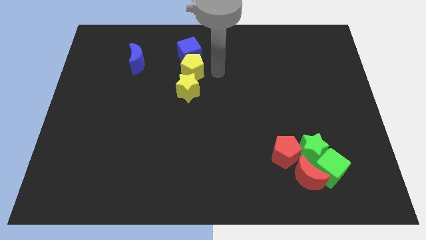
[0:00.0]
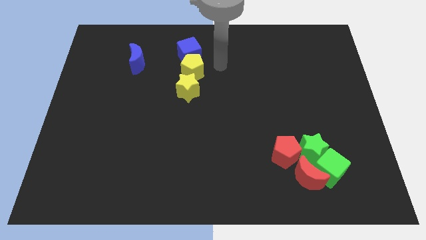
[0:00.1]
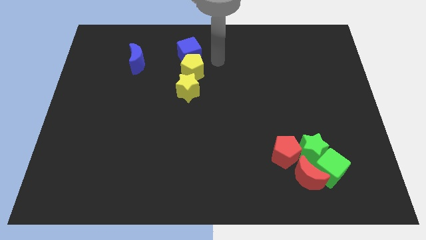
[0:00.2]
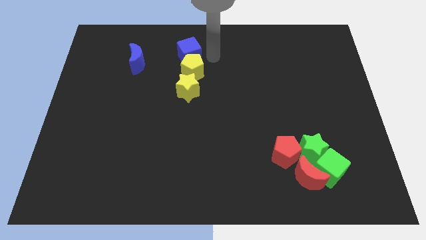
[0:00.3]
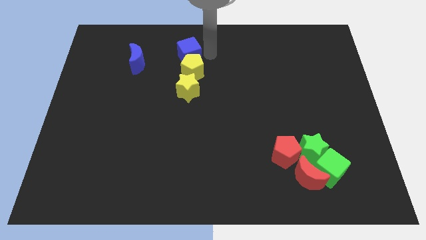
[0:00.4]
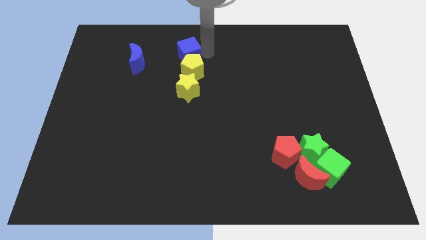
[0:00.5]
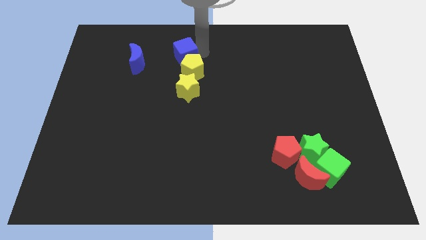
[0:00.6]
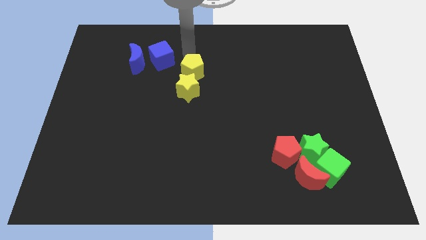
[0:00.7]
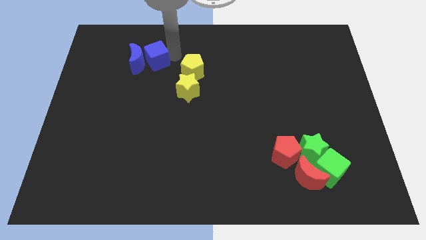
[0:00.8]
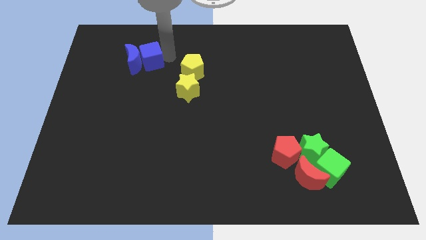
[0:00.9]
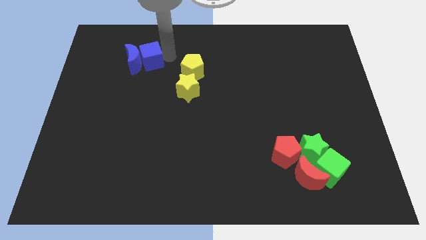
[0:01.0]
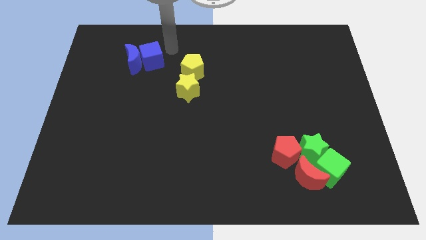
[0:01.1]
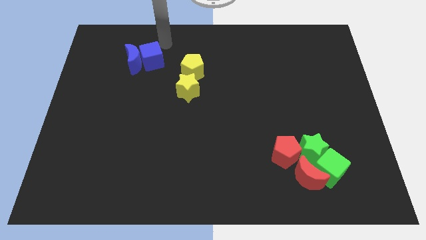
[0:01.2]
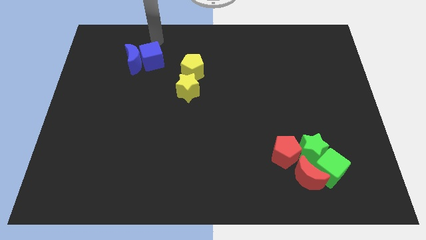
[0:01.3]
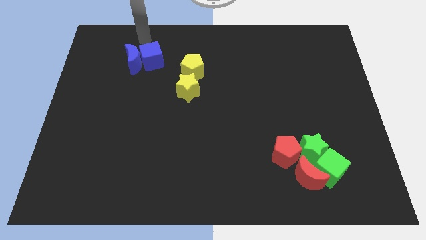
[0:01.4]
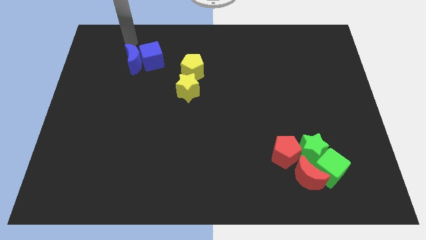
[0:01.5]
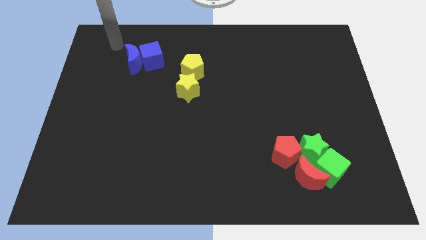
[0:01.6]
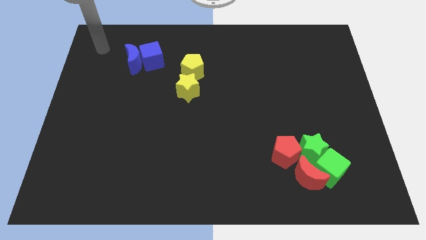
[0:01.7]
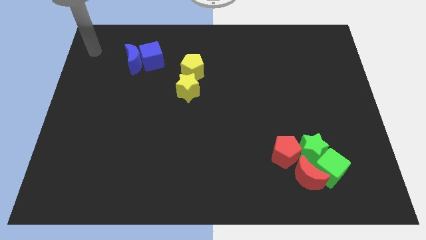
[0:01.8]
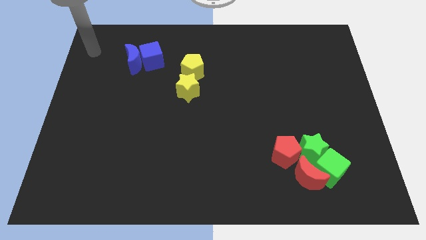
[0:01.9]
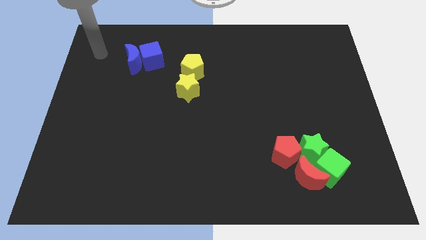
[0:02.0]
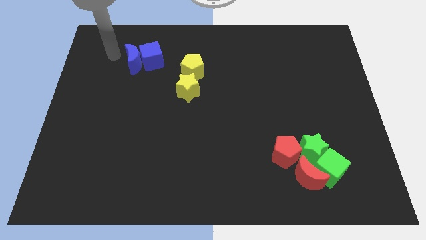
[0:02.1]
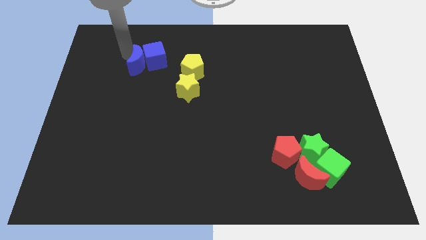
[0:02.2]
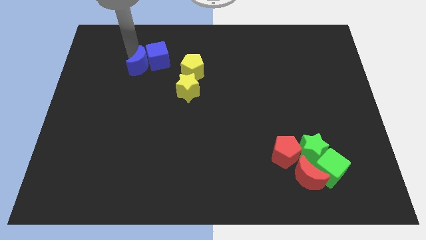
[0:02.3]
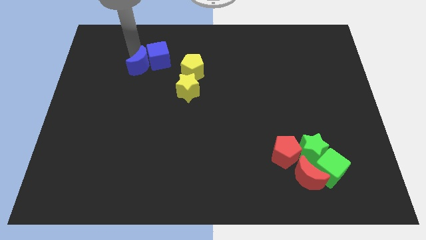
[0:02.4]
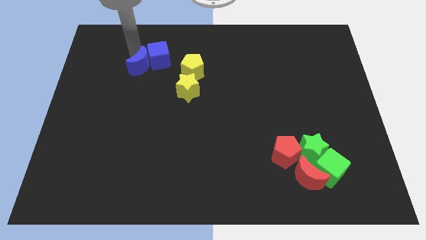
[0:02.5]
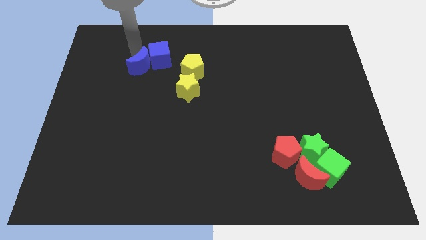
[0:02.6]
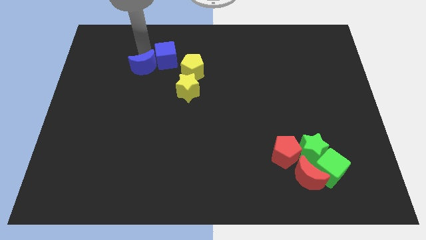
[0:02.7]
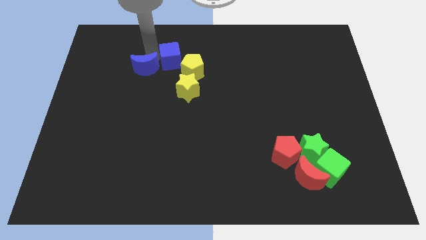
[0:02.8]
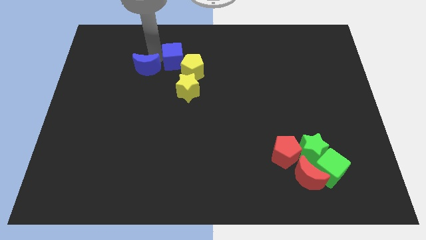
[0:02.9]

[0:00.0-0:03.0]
push the blue cube into the blue moon

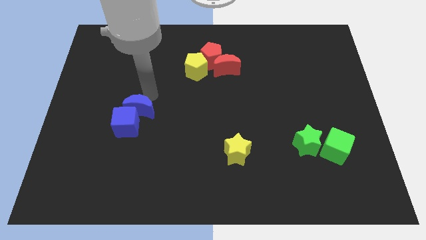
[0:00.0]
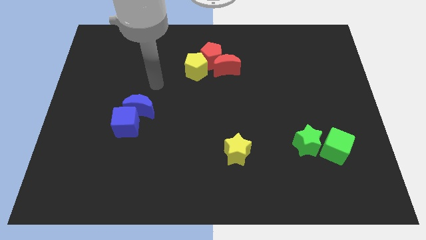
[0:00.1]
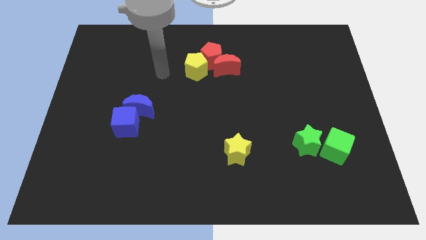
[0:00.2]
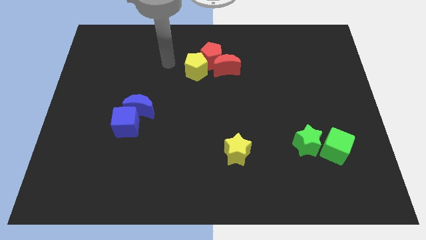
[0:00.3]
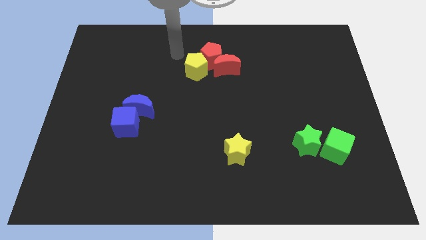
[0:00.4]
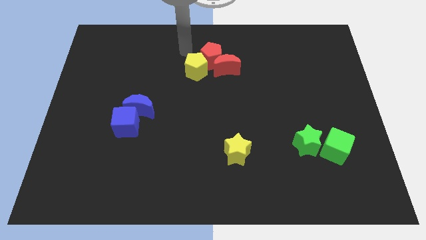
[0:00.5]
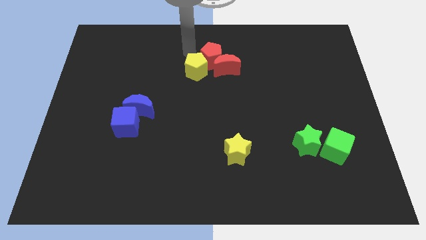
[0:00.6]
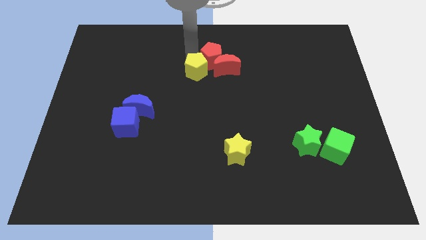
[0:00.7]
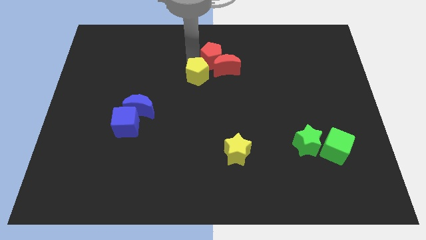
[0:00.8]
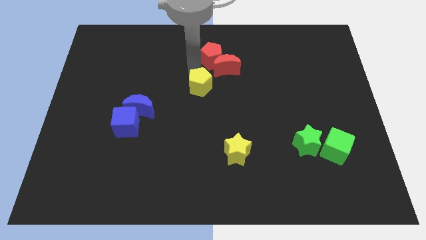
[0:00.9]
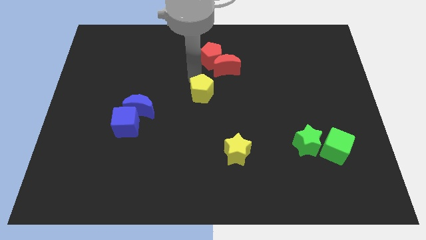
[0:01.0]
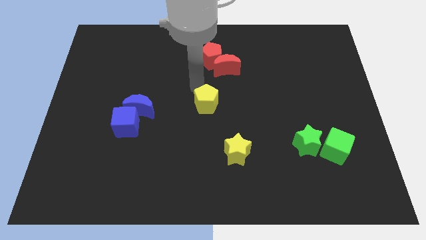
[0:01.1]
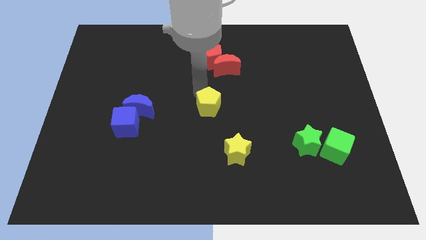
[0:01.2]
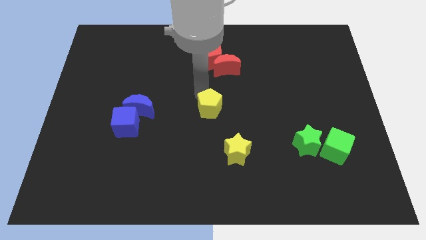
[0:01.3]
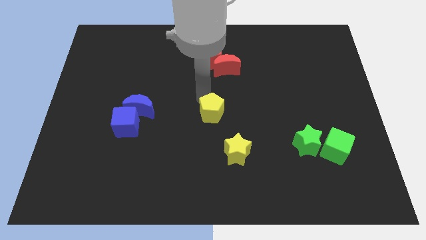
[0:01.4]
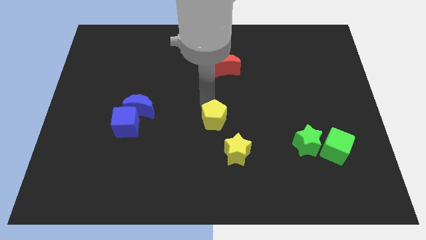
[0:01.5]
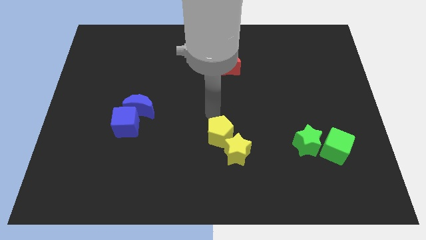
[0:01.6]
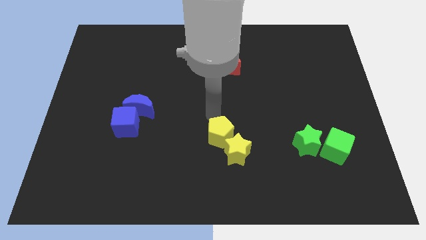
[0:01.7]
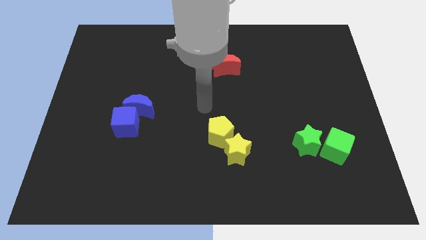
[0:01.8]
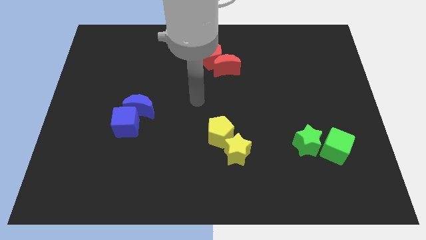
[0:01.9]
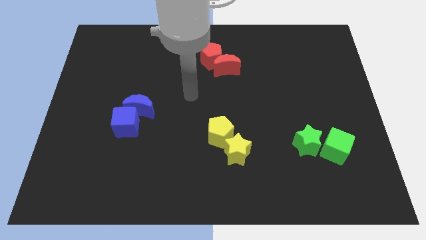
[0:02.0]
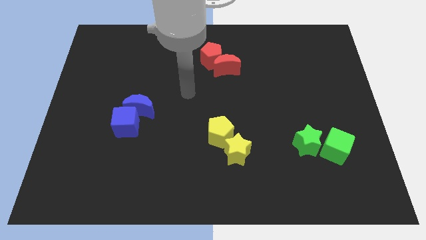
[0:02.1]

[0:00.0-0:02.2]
place yellow pentagon on top of the yellow star

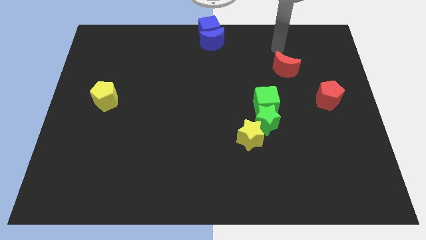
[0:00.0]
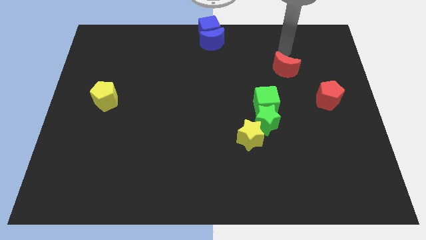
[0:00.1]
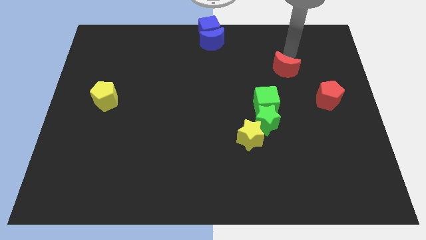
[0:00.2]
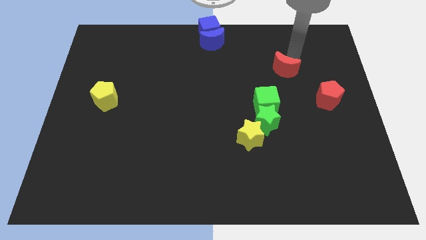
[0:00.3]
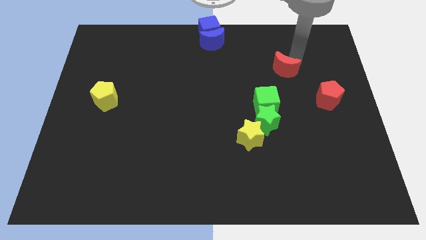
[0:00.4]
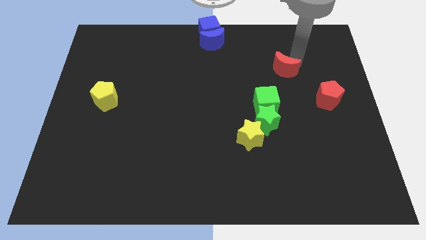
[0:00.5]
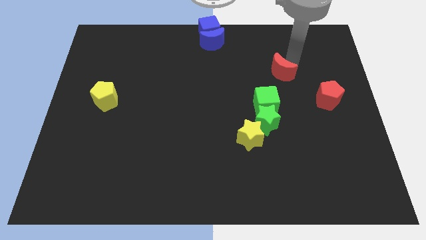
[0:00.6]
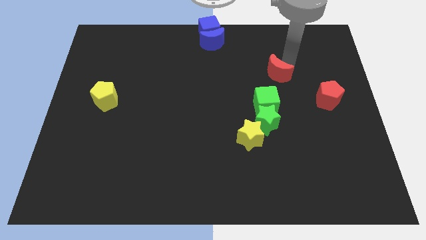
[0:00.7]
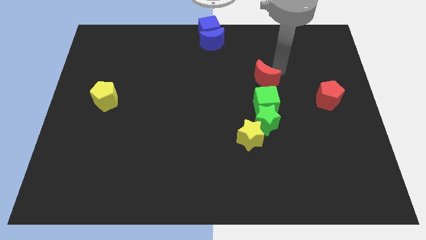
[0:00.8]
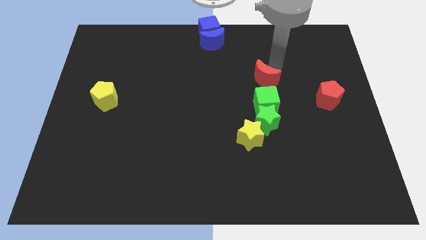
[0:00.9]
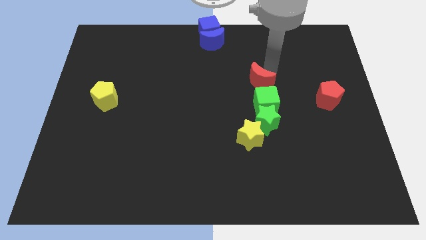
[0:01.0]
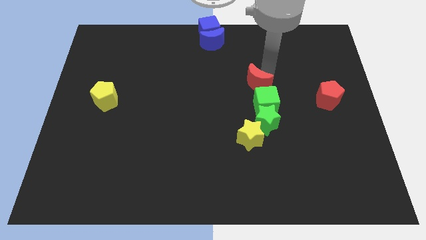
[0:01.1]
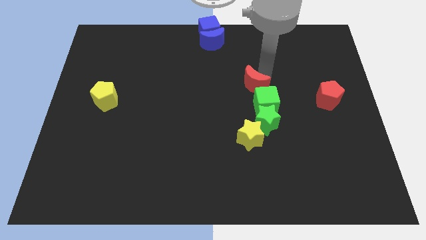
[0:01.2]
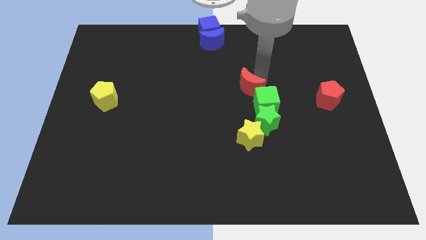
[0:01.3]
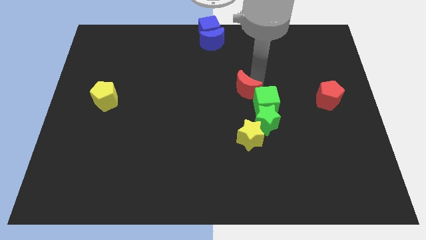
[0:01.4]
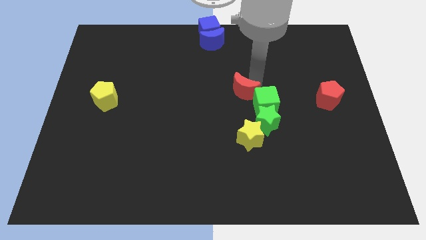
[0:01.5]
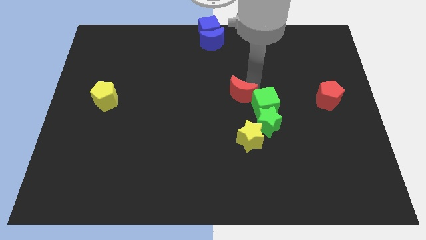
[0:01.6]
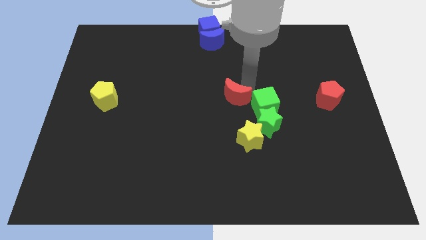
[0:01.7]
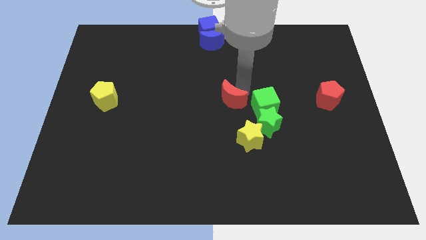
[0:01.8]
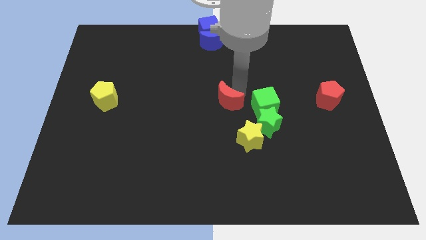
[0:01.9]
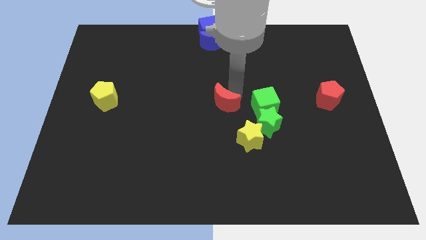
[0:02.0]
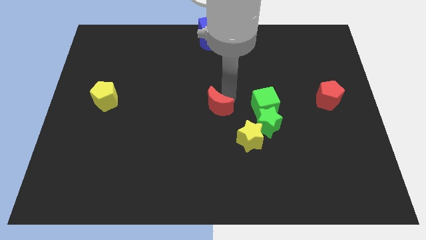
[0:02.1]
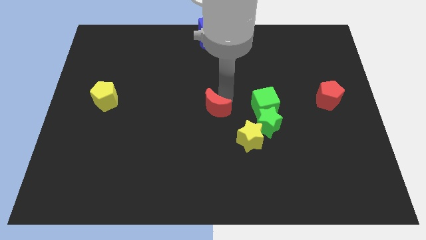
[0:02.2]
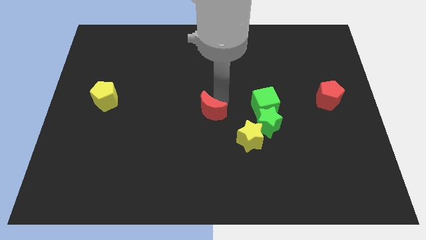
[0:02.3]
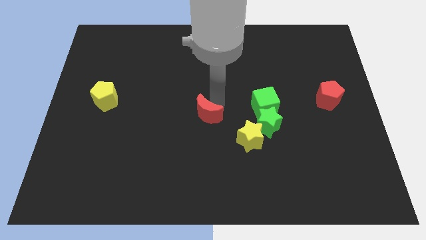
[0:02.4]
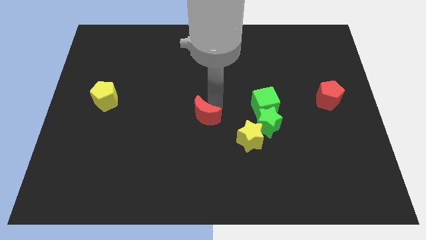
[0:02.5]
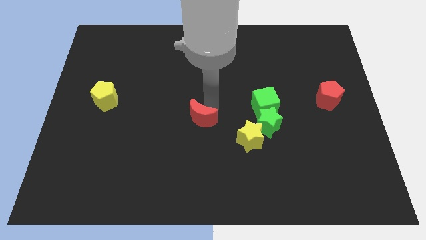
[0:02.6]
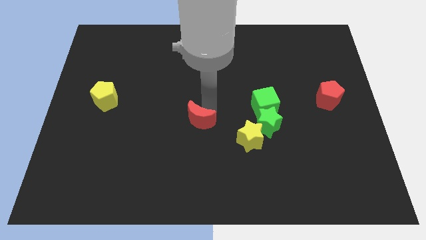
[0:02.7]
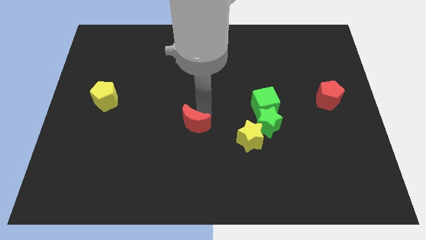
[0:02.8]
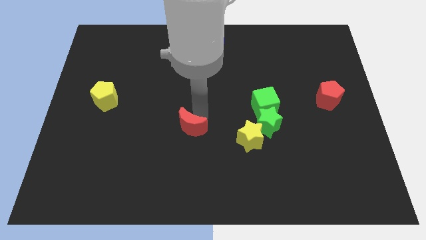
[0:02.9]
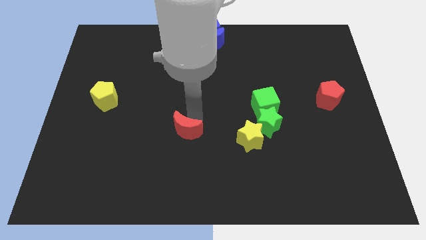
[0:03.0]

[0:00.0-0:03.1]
move the red moon between yellow star and yellow pentagon

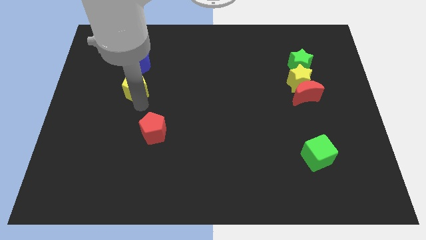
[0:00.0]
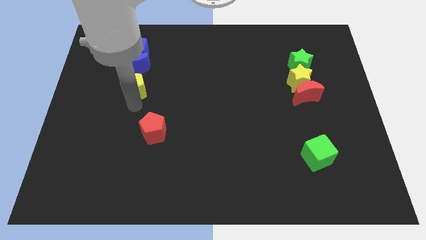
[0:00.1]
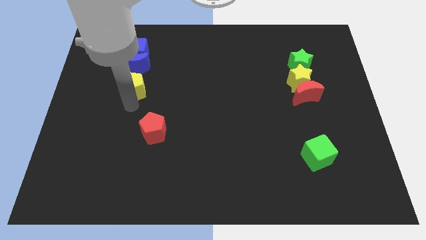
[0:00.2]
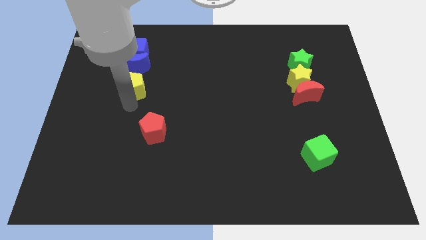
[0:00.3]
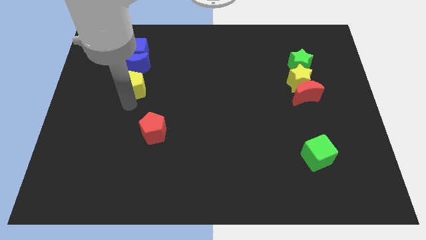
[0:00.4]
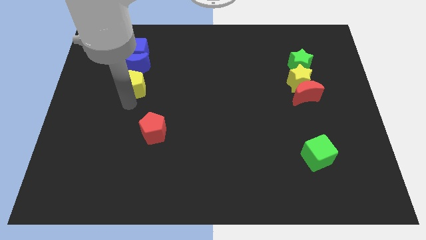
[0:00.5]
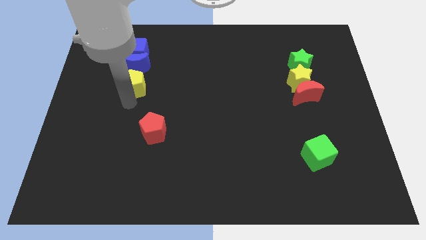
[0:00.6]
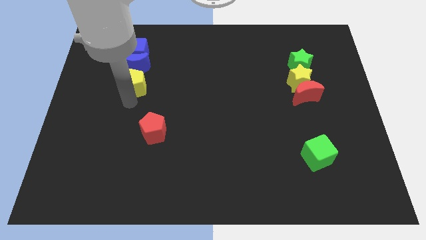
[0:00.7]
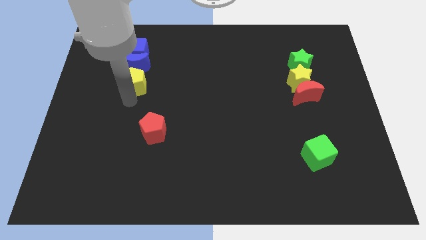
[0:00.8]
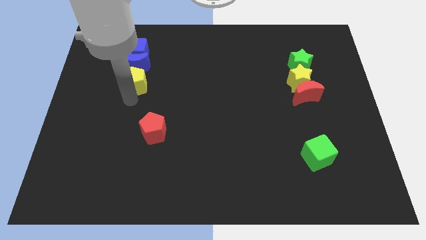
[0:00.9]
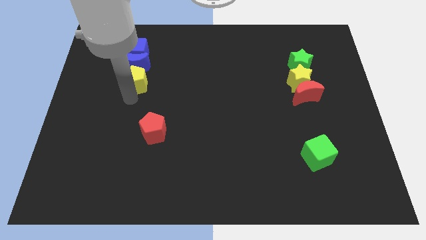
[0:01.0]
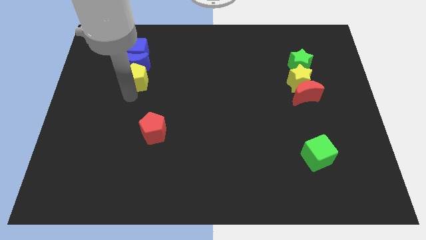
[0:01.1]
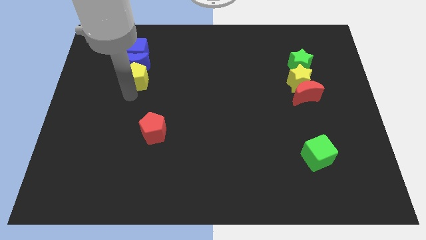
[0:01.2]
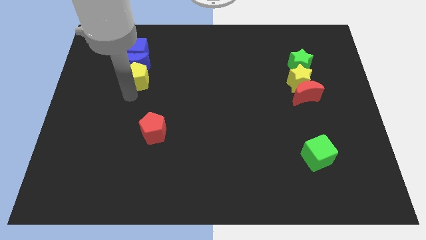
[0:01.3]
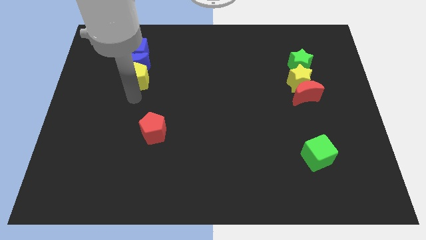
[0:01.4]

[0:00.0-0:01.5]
move the yellow pentagon into the blue crescent
